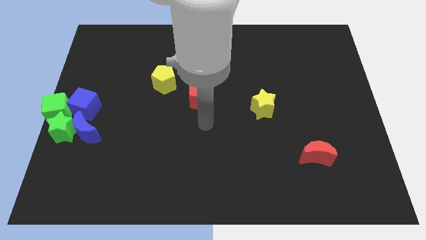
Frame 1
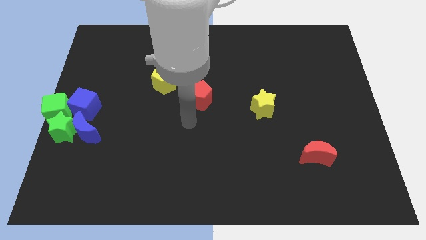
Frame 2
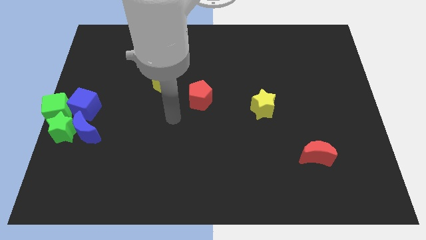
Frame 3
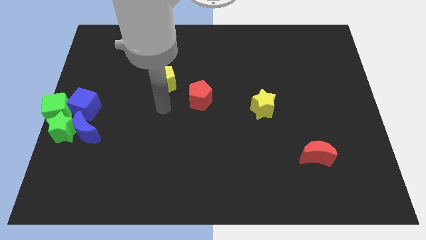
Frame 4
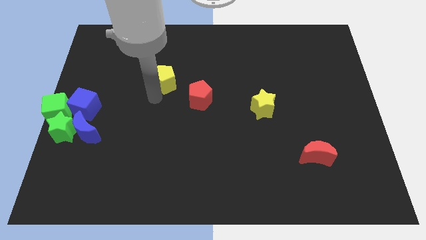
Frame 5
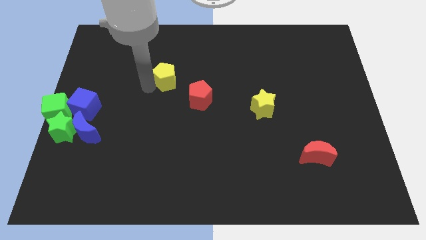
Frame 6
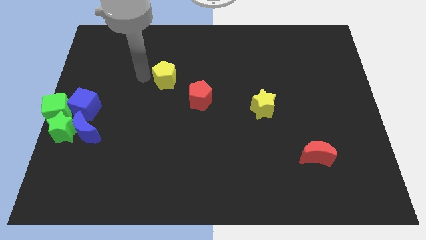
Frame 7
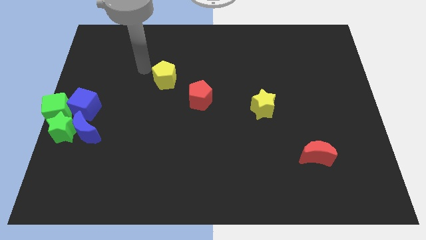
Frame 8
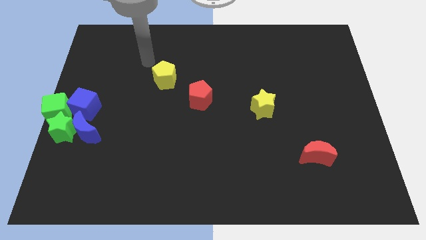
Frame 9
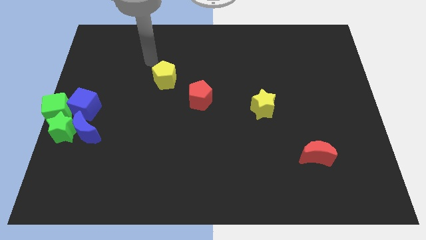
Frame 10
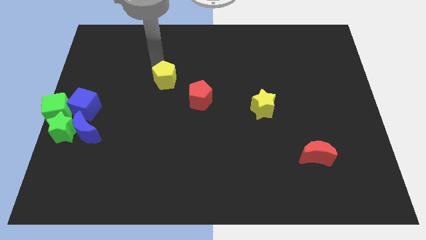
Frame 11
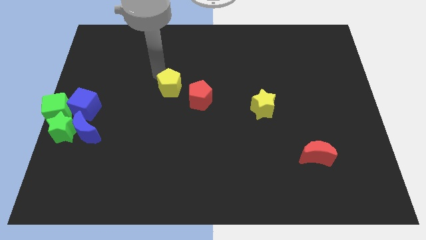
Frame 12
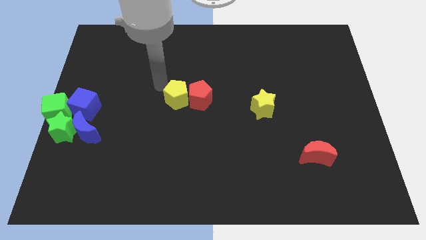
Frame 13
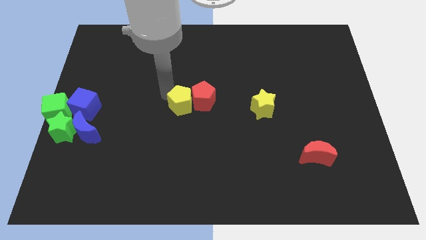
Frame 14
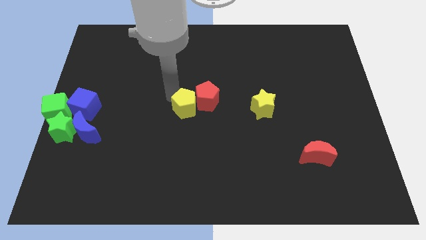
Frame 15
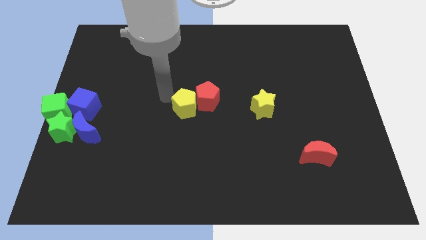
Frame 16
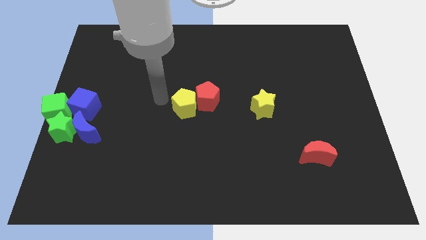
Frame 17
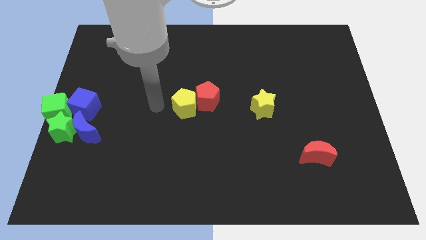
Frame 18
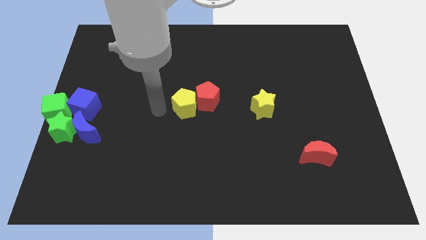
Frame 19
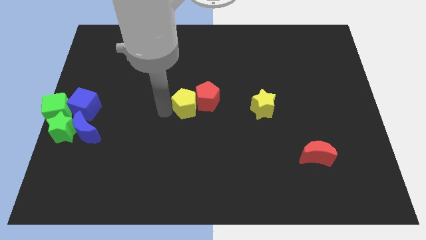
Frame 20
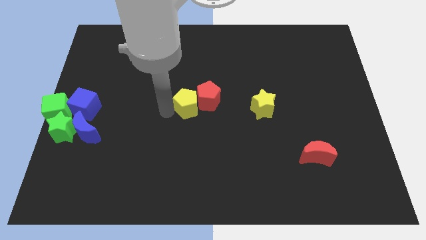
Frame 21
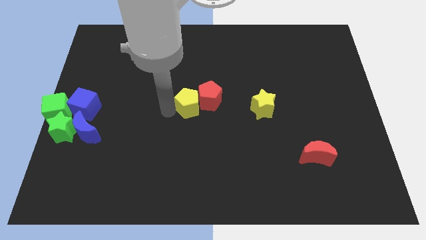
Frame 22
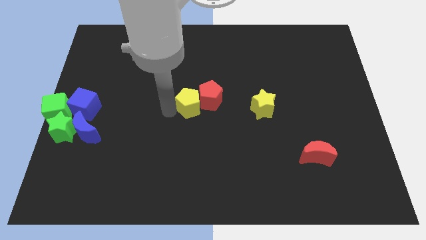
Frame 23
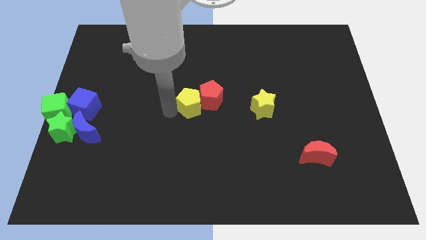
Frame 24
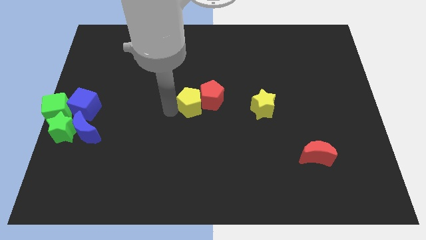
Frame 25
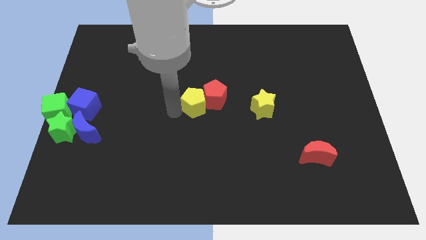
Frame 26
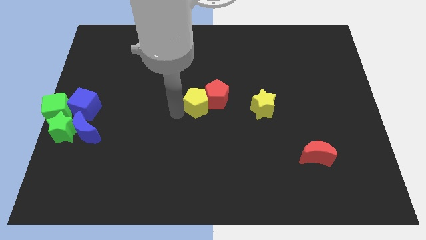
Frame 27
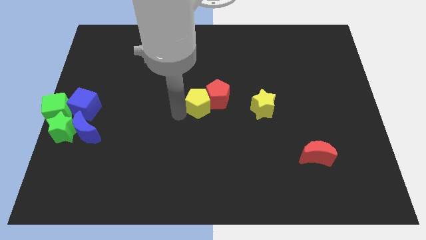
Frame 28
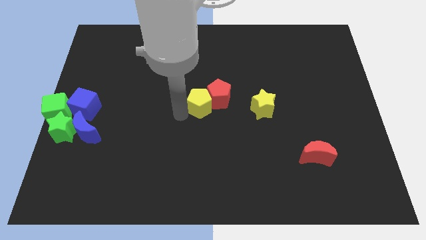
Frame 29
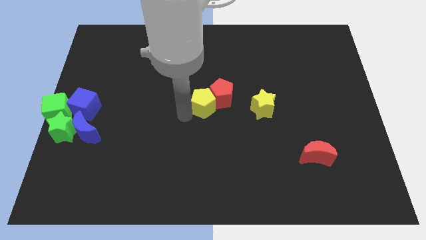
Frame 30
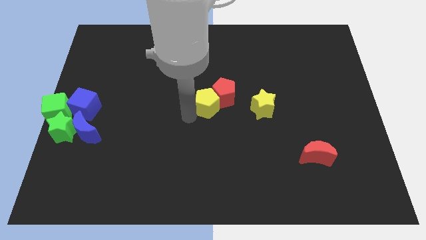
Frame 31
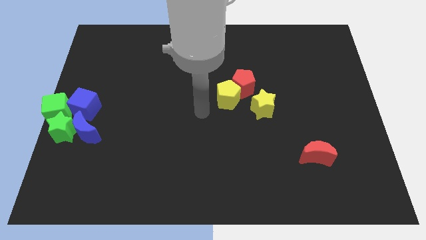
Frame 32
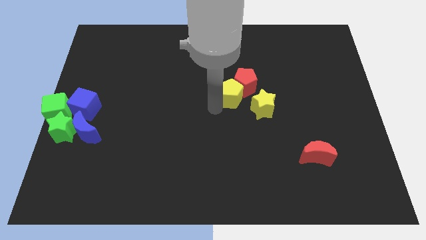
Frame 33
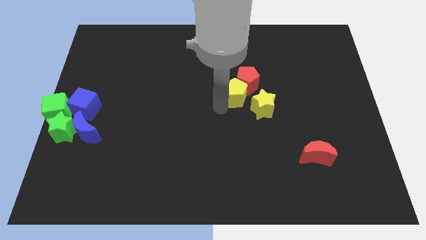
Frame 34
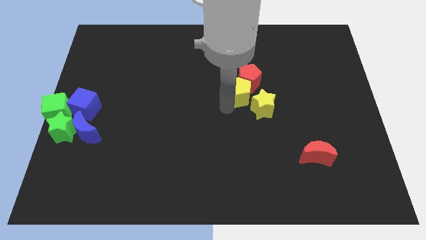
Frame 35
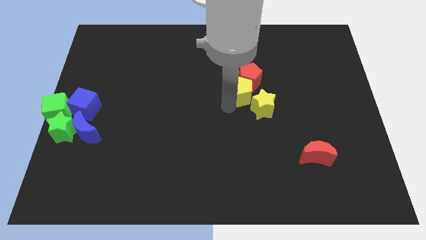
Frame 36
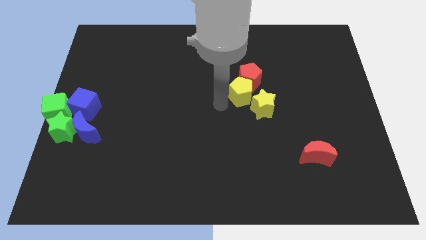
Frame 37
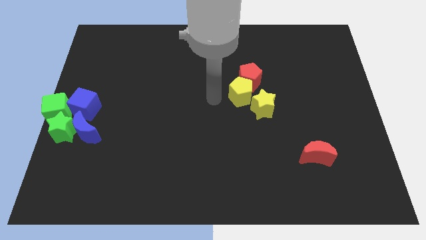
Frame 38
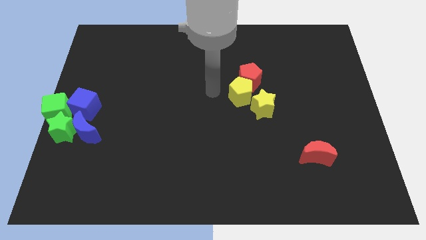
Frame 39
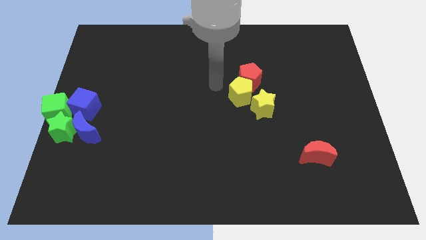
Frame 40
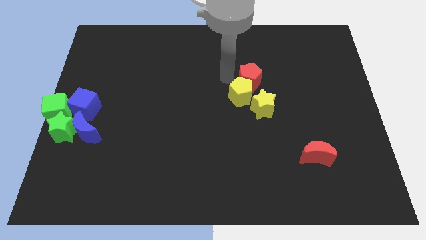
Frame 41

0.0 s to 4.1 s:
push the yellow pentagon to the top left of yellow star

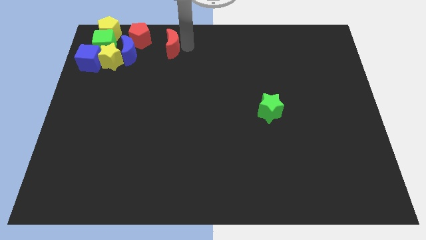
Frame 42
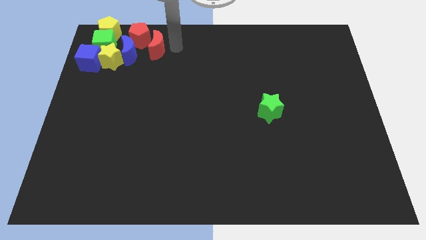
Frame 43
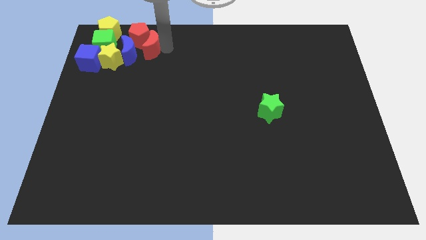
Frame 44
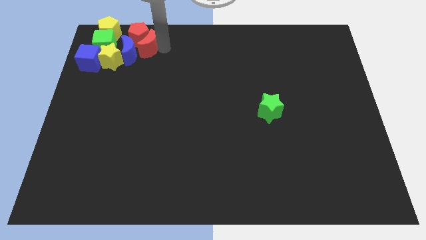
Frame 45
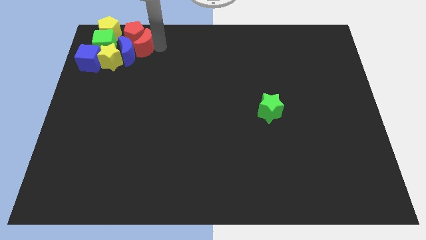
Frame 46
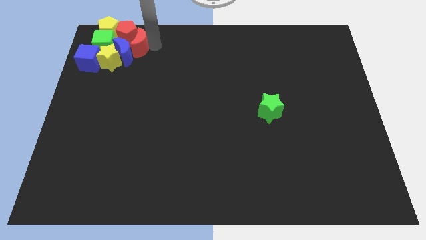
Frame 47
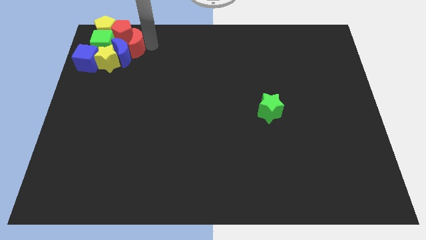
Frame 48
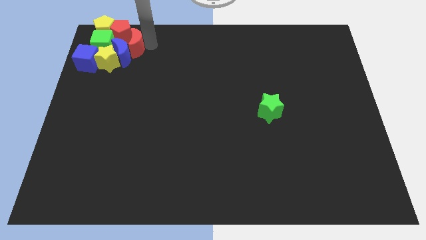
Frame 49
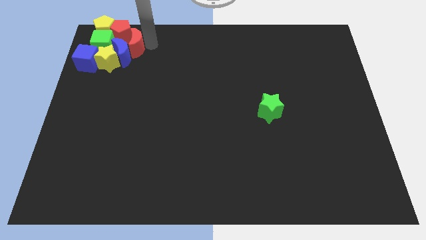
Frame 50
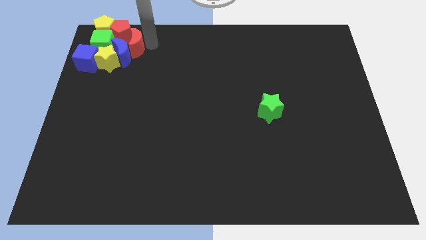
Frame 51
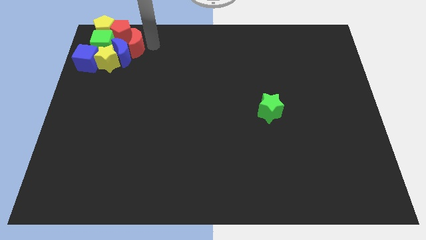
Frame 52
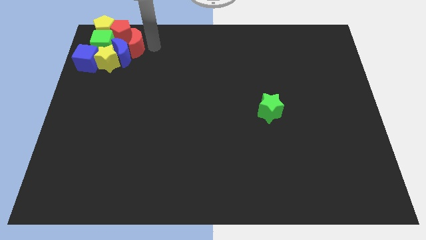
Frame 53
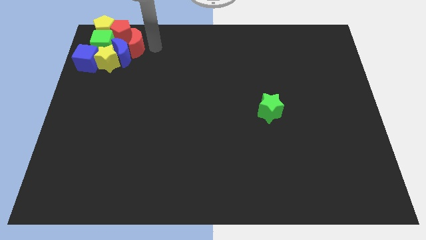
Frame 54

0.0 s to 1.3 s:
push the red crescent to the top left on the board

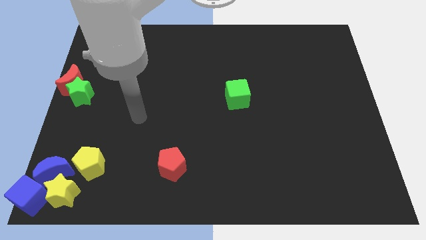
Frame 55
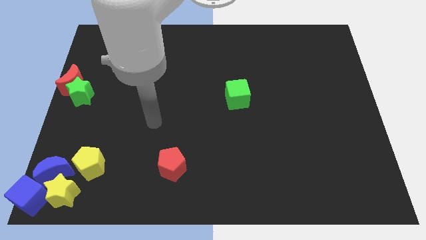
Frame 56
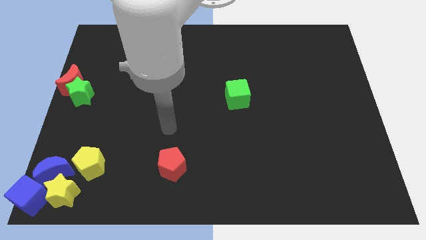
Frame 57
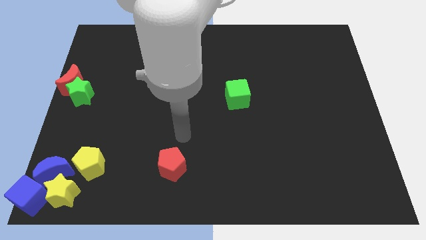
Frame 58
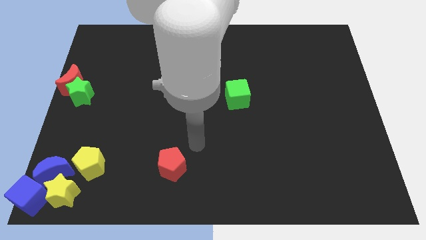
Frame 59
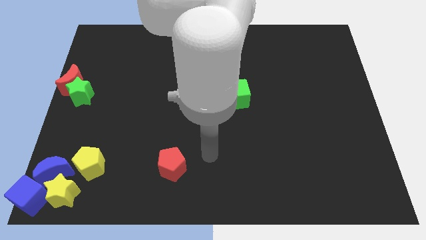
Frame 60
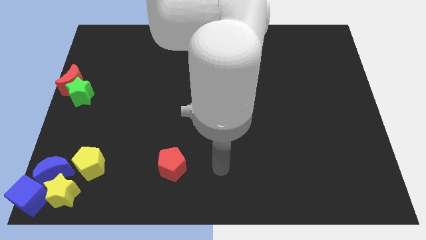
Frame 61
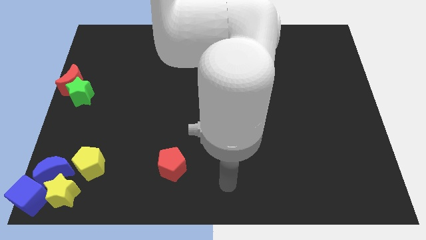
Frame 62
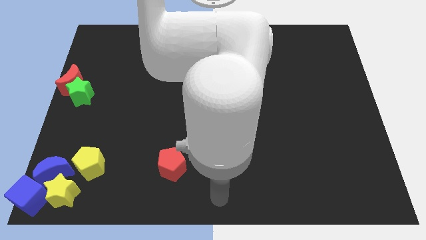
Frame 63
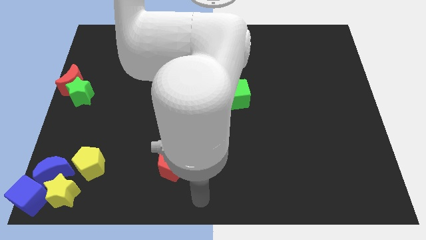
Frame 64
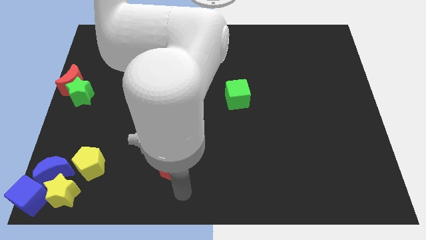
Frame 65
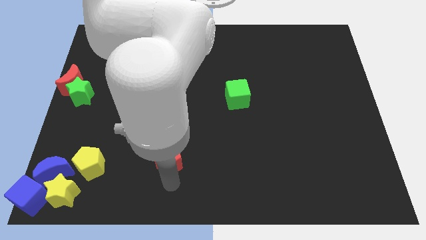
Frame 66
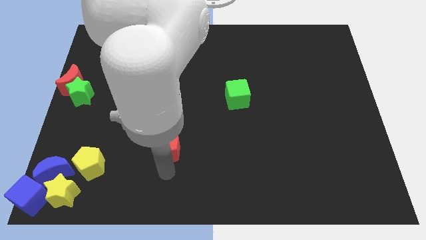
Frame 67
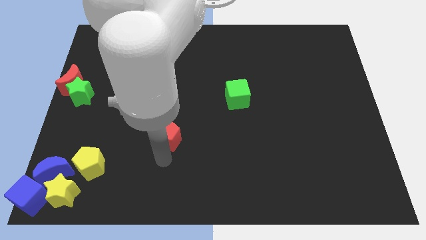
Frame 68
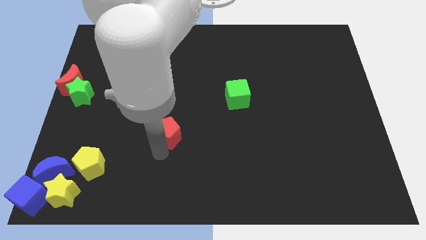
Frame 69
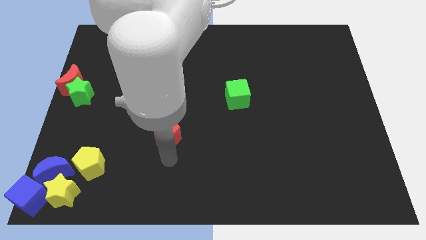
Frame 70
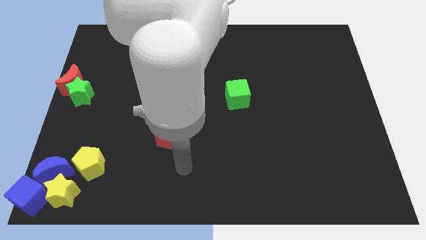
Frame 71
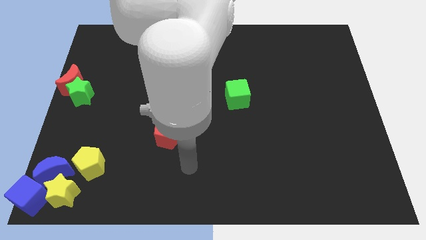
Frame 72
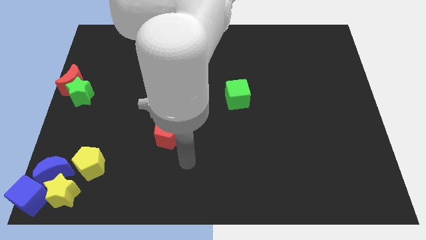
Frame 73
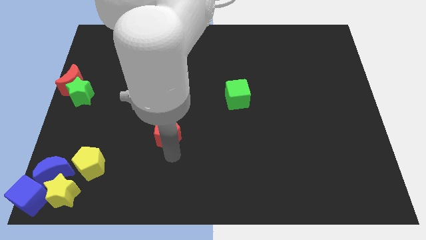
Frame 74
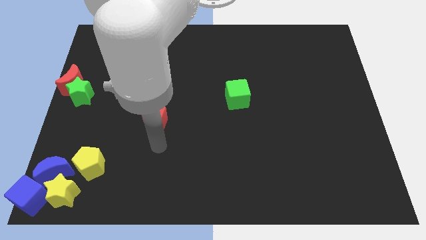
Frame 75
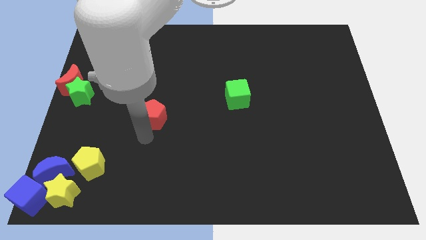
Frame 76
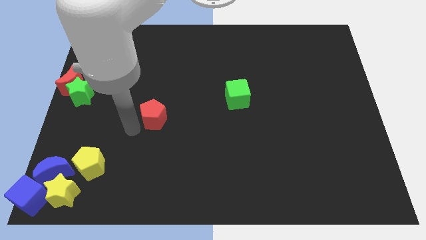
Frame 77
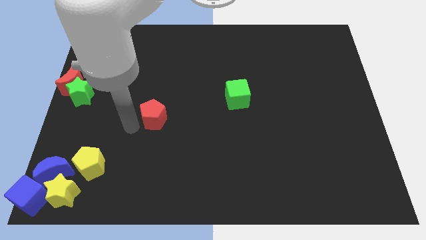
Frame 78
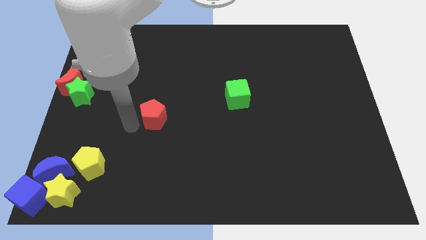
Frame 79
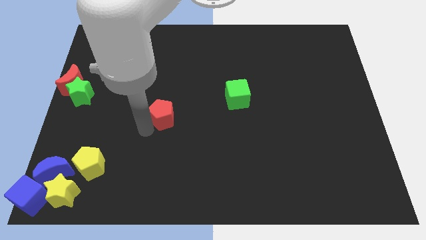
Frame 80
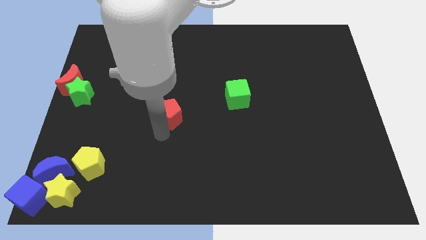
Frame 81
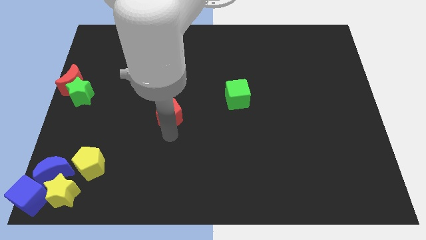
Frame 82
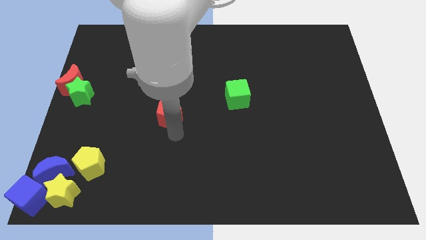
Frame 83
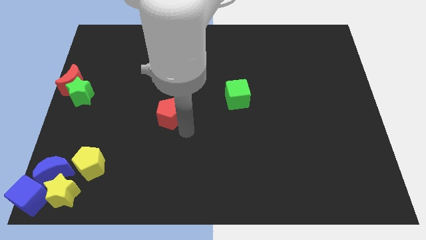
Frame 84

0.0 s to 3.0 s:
slightly move the red pentagon towards top

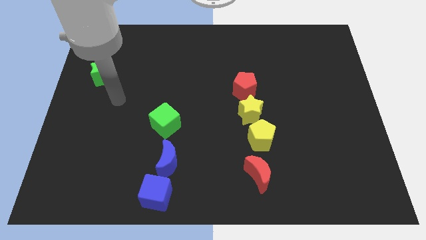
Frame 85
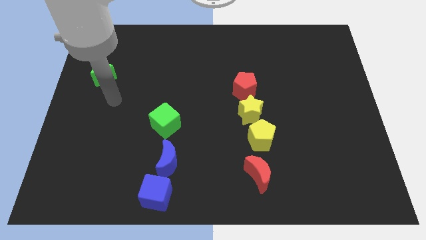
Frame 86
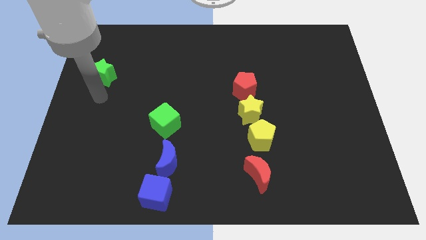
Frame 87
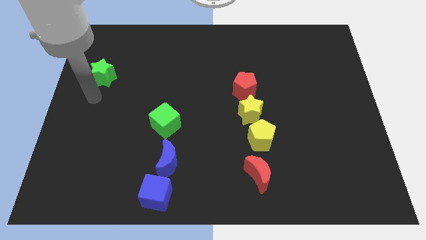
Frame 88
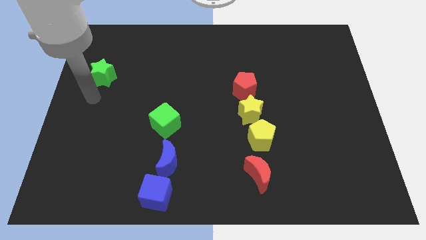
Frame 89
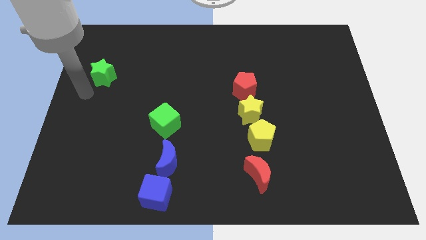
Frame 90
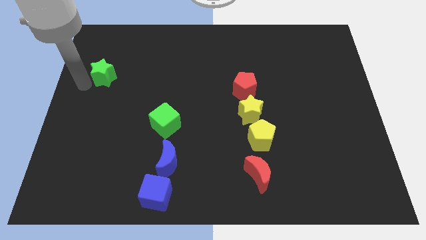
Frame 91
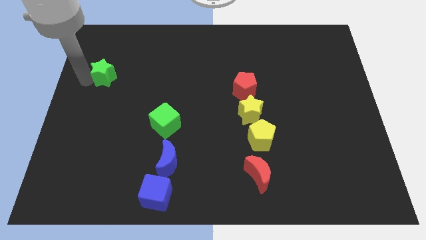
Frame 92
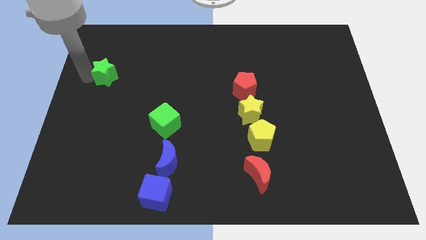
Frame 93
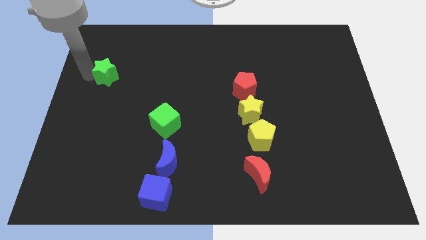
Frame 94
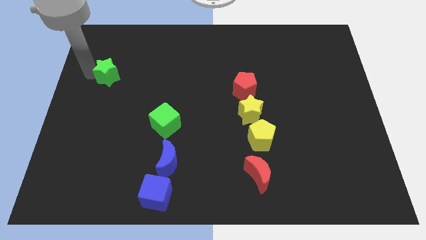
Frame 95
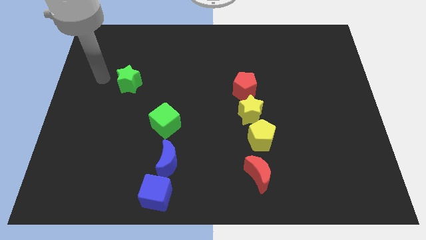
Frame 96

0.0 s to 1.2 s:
go near green star
